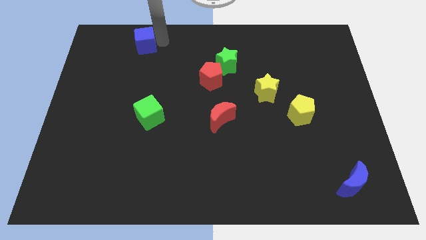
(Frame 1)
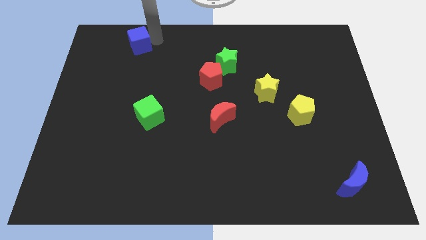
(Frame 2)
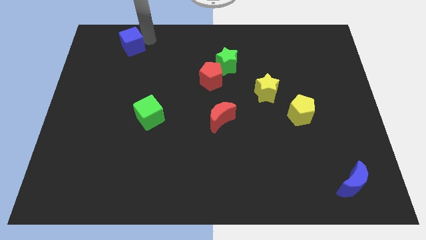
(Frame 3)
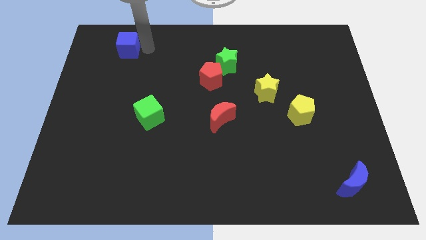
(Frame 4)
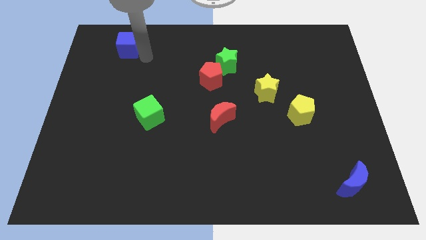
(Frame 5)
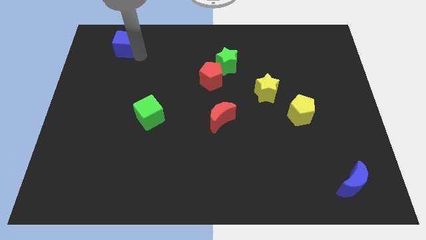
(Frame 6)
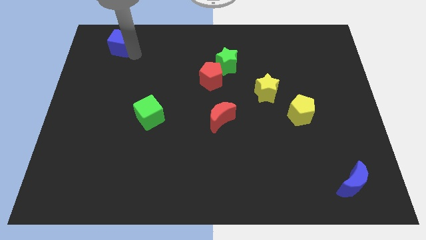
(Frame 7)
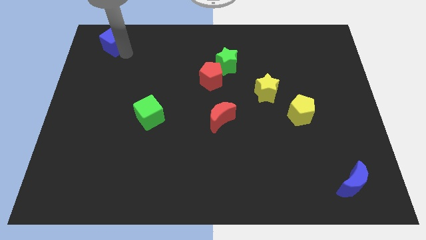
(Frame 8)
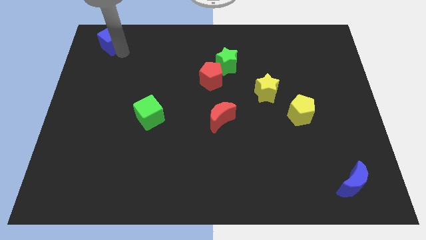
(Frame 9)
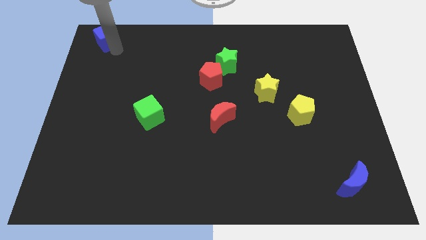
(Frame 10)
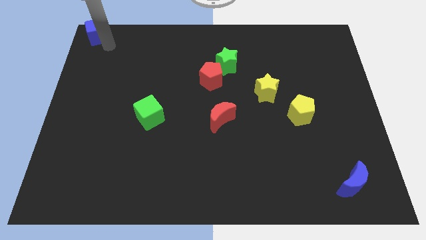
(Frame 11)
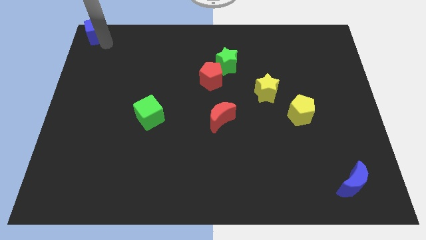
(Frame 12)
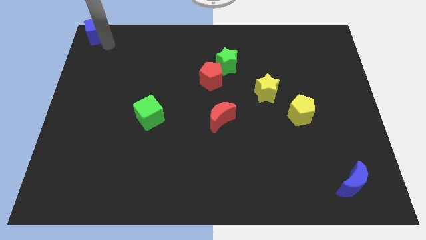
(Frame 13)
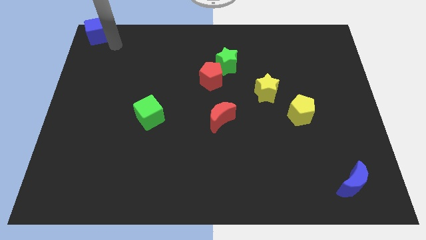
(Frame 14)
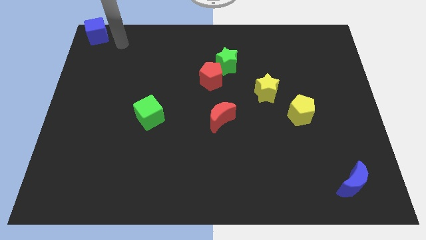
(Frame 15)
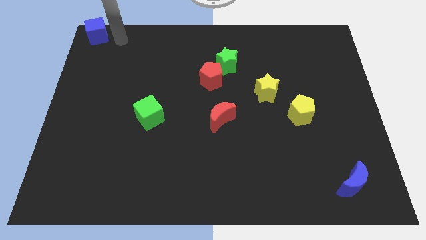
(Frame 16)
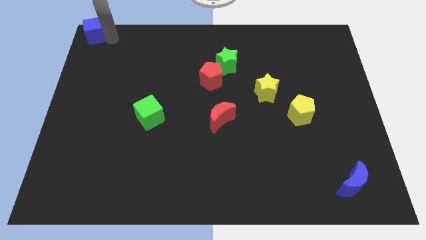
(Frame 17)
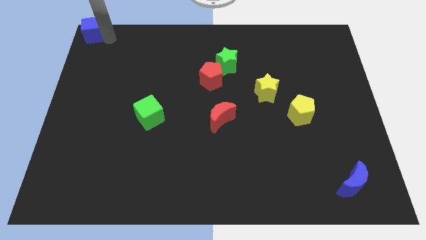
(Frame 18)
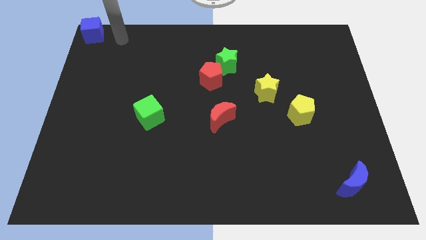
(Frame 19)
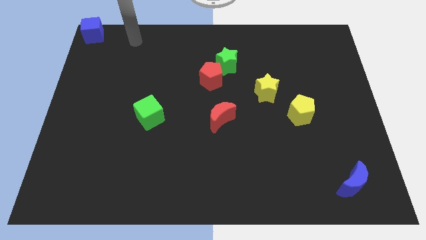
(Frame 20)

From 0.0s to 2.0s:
place the blue cube diagonal to the green cube

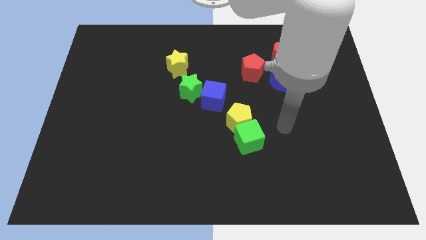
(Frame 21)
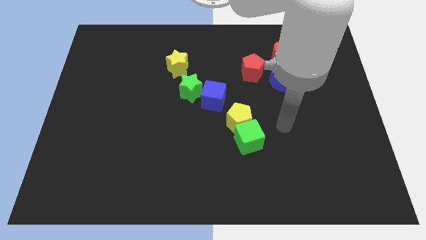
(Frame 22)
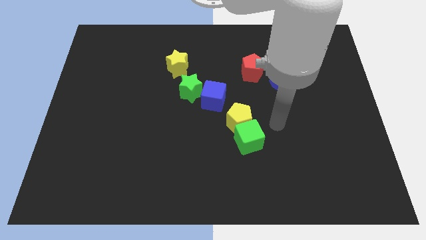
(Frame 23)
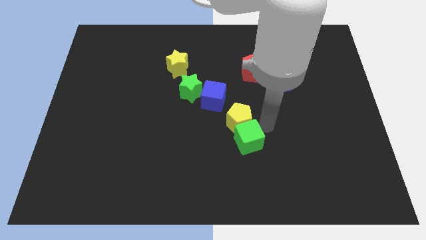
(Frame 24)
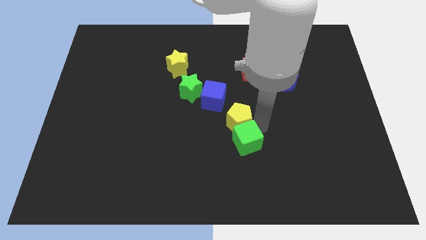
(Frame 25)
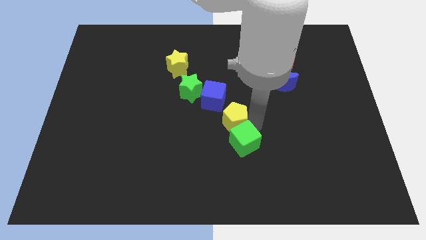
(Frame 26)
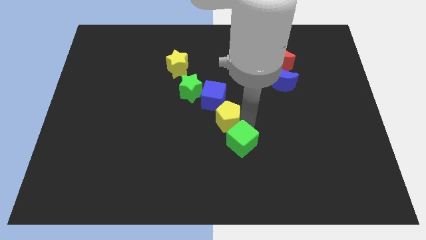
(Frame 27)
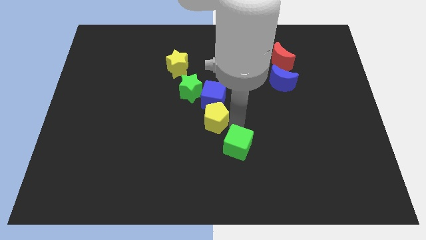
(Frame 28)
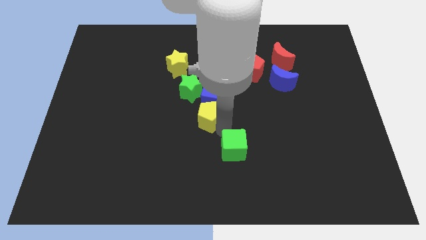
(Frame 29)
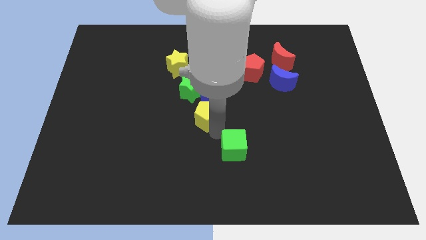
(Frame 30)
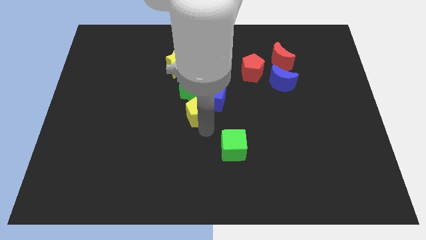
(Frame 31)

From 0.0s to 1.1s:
separate yellow pentagon and green cube

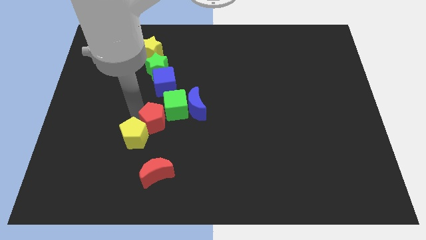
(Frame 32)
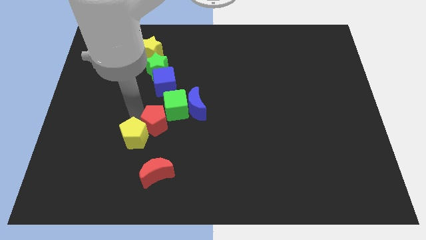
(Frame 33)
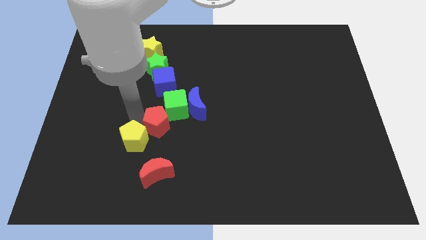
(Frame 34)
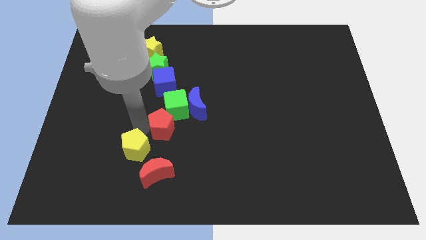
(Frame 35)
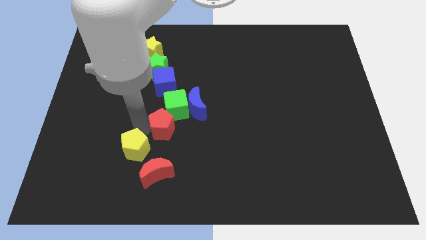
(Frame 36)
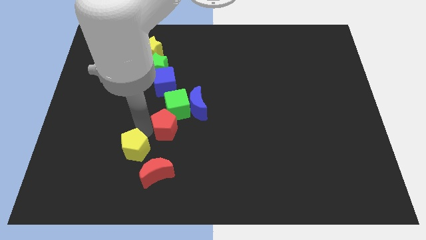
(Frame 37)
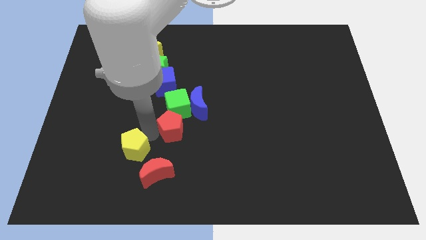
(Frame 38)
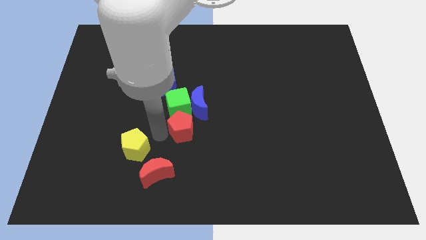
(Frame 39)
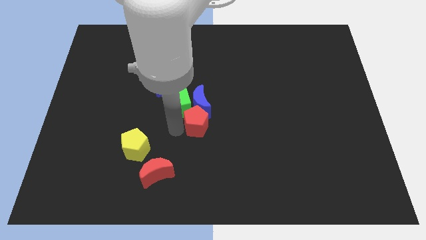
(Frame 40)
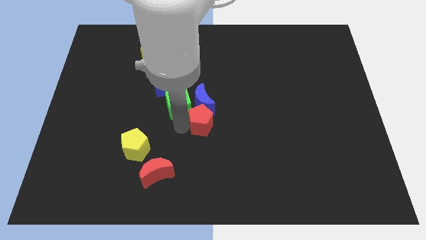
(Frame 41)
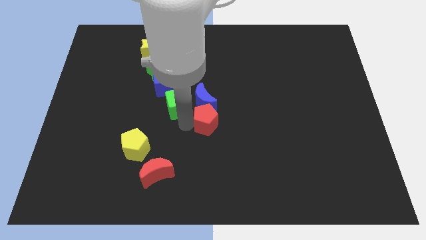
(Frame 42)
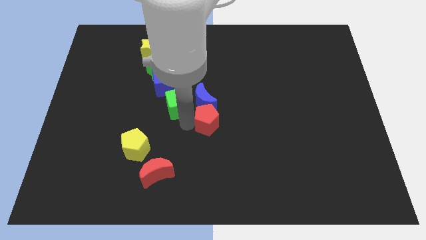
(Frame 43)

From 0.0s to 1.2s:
separate red pentagon and the yellow pentagon

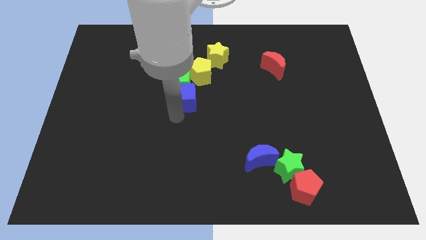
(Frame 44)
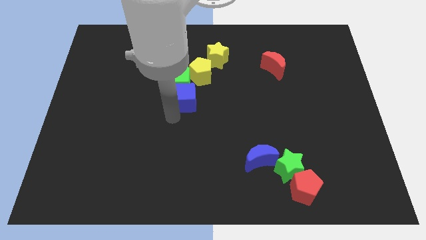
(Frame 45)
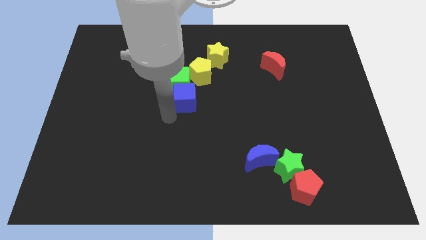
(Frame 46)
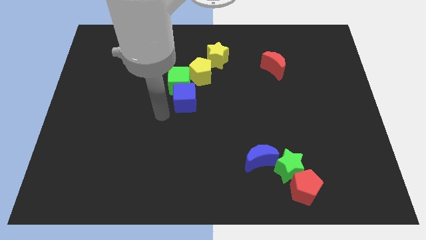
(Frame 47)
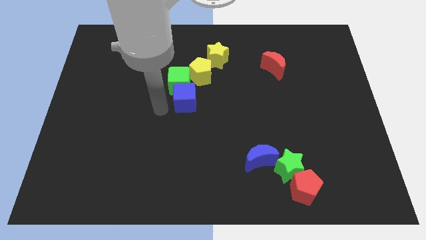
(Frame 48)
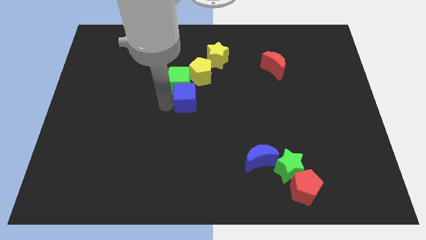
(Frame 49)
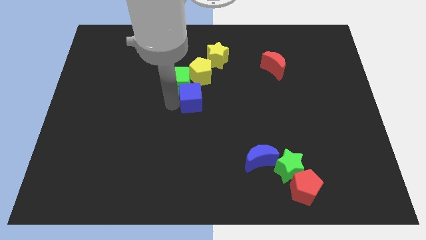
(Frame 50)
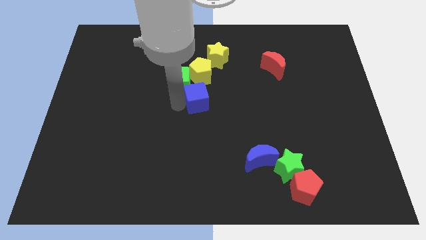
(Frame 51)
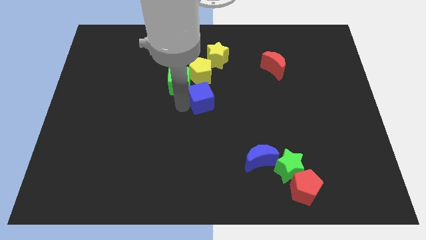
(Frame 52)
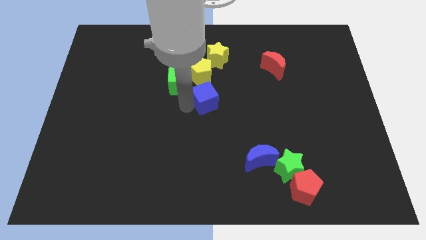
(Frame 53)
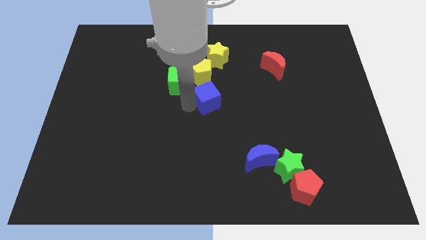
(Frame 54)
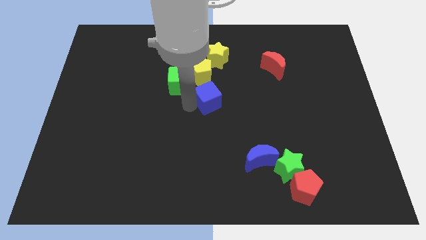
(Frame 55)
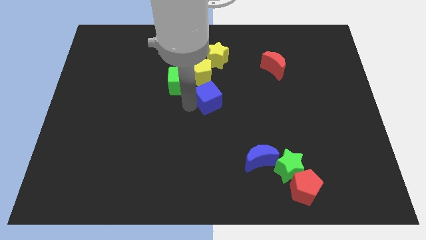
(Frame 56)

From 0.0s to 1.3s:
place the blue cube below the yellow pentagon

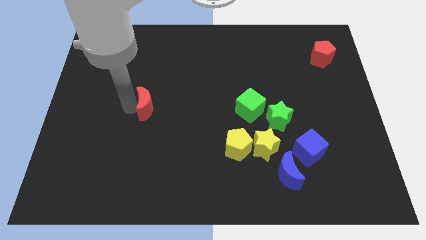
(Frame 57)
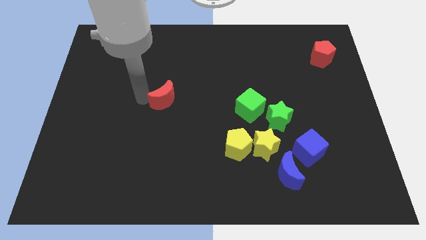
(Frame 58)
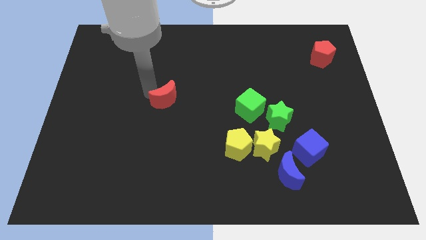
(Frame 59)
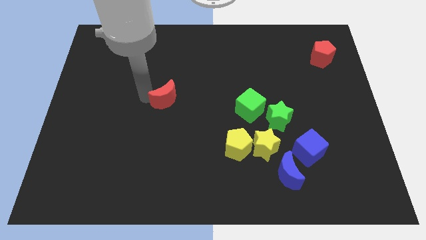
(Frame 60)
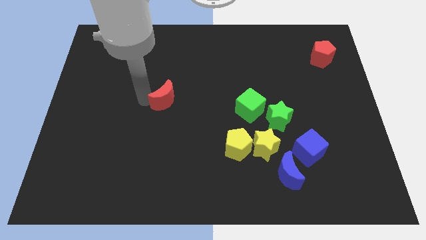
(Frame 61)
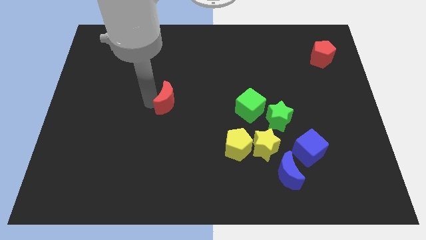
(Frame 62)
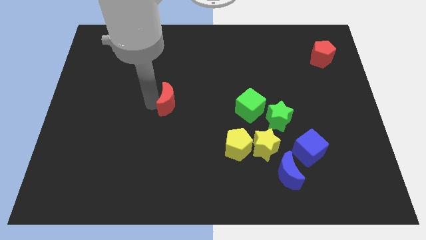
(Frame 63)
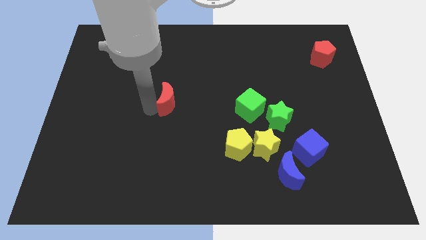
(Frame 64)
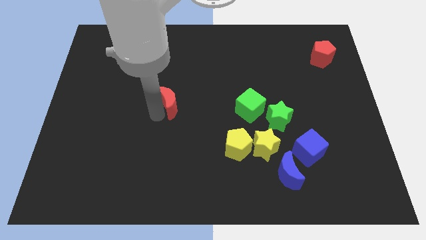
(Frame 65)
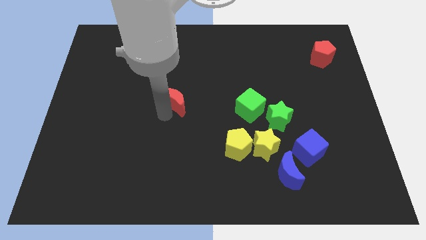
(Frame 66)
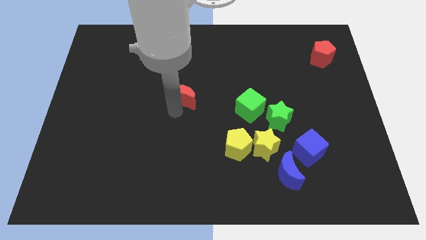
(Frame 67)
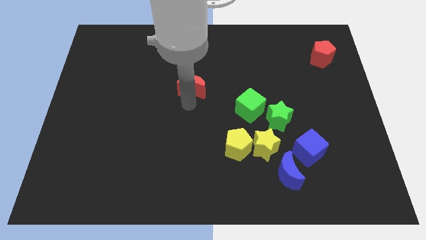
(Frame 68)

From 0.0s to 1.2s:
push the red crescent to the center of the board

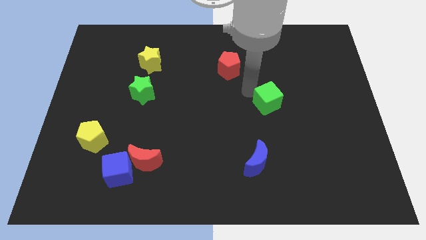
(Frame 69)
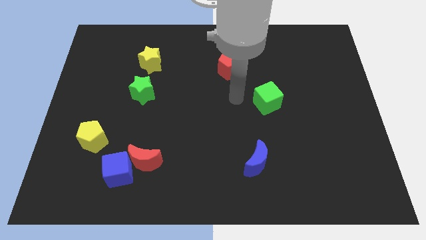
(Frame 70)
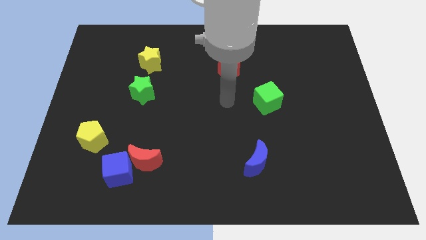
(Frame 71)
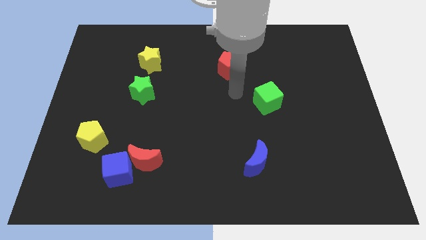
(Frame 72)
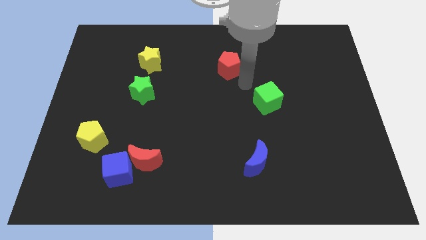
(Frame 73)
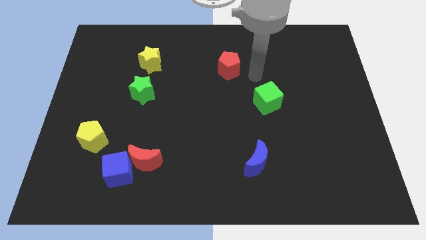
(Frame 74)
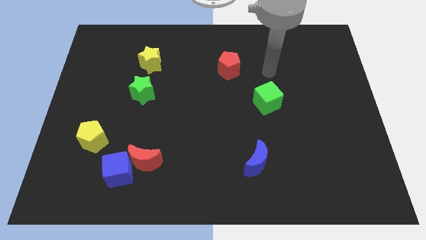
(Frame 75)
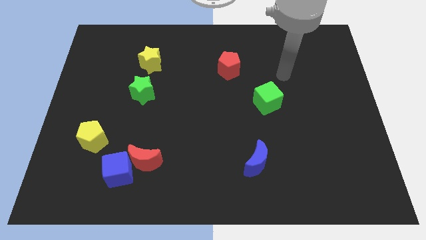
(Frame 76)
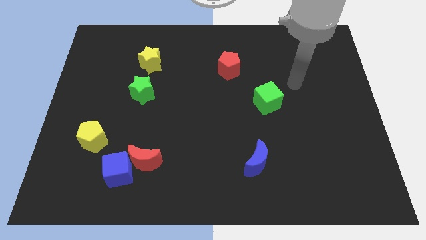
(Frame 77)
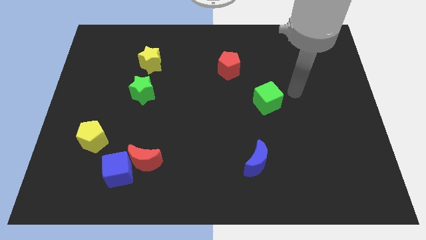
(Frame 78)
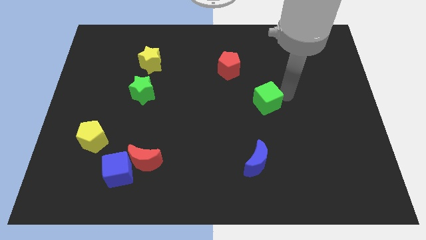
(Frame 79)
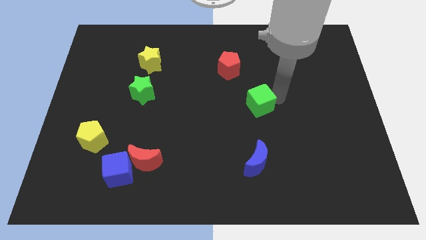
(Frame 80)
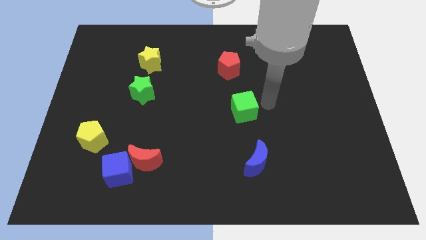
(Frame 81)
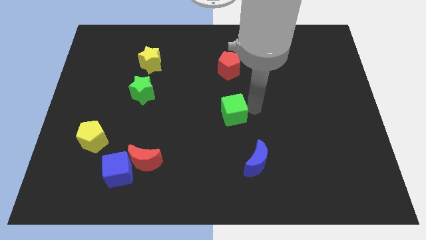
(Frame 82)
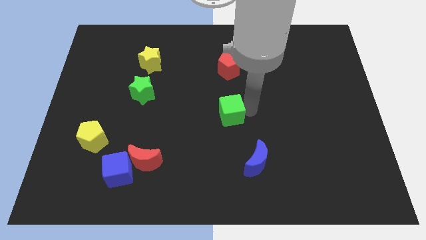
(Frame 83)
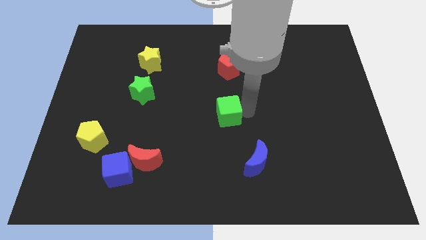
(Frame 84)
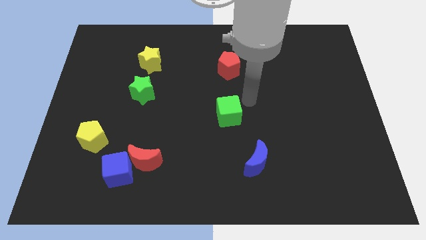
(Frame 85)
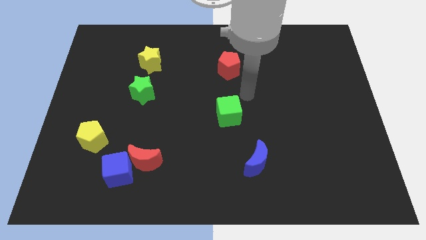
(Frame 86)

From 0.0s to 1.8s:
place the green cube vertically on the bottom side of the red pentagon

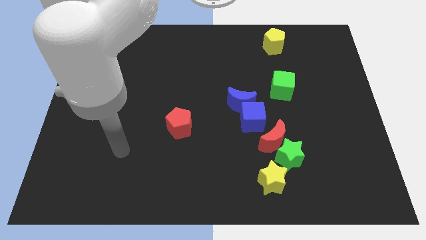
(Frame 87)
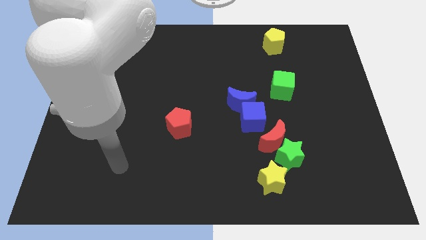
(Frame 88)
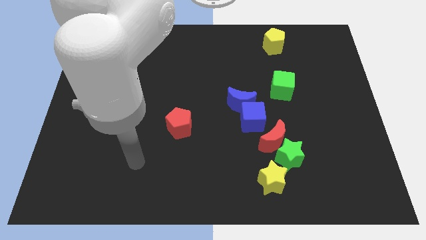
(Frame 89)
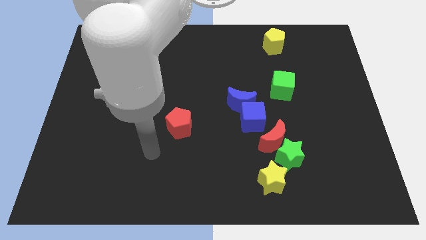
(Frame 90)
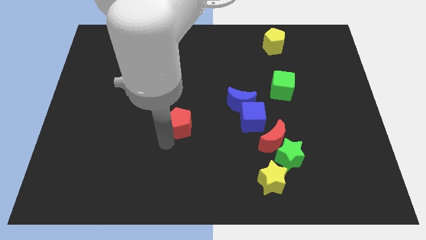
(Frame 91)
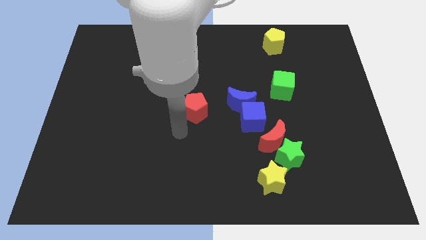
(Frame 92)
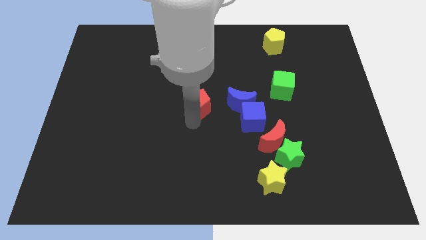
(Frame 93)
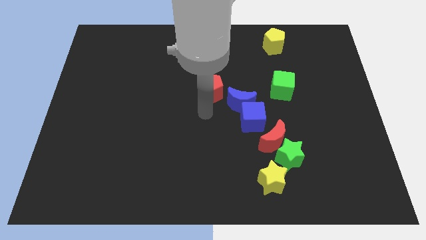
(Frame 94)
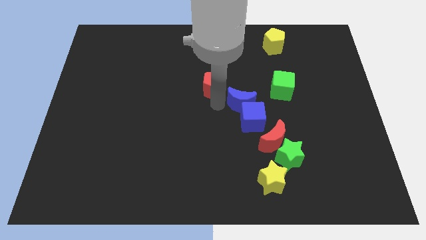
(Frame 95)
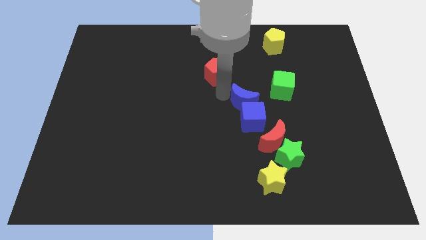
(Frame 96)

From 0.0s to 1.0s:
push the red pentagon to the top left of the blue moon
